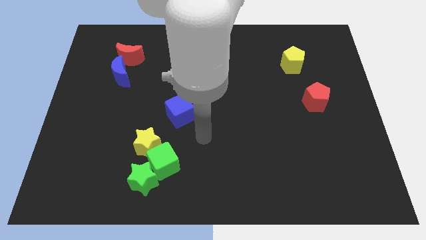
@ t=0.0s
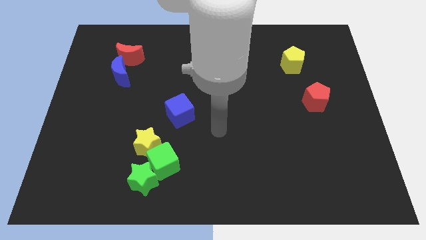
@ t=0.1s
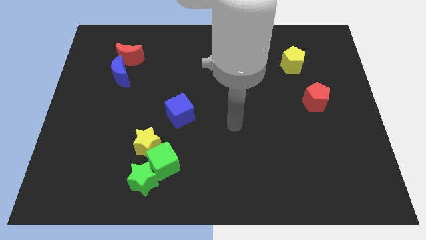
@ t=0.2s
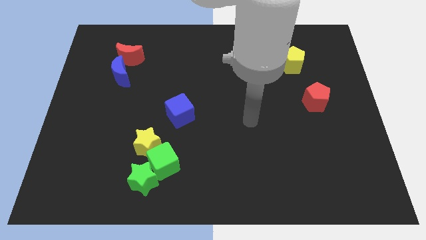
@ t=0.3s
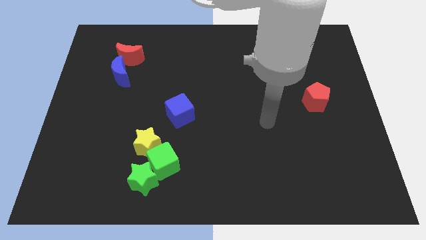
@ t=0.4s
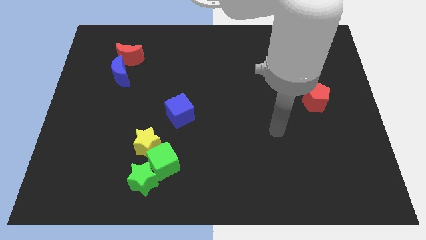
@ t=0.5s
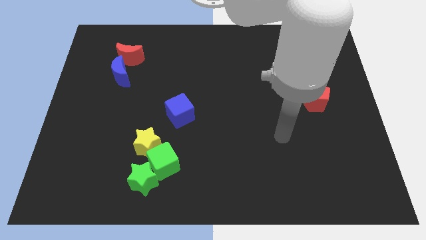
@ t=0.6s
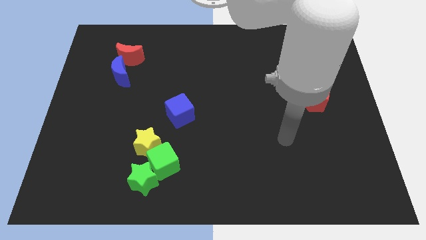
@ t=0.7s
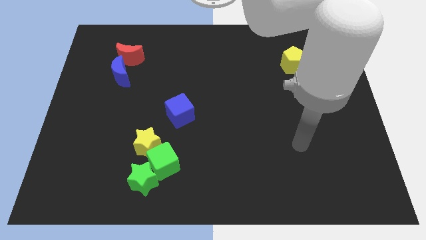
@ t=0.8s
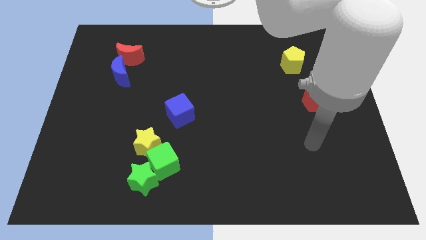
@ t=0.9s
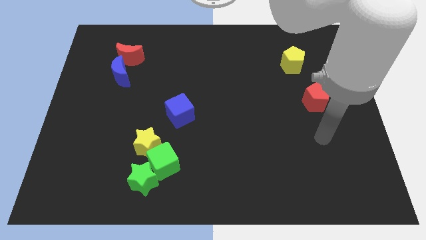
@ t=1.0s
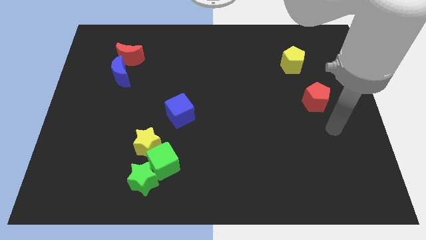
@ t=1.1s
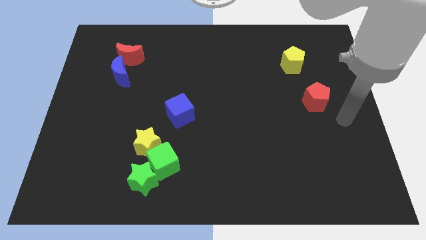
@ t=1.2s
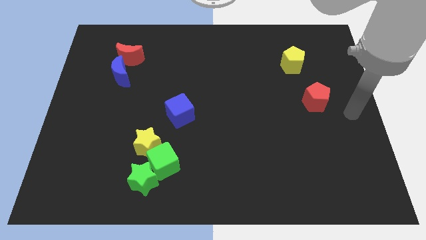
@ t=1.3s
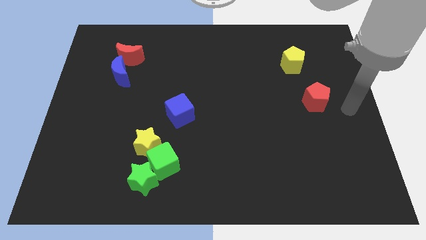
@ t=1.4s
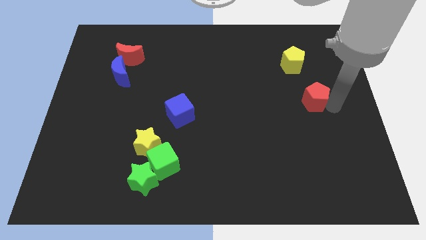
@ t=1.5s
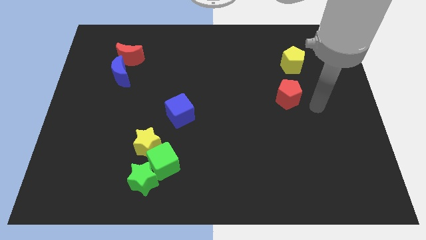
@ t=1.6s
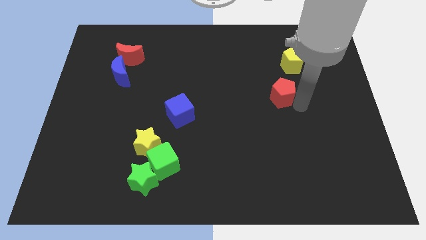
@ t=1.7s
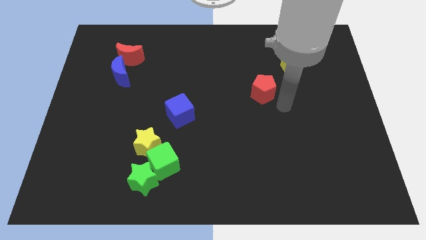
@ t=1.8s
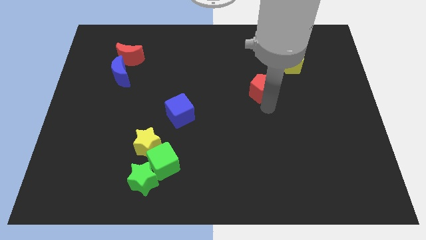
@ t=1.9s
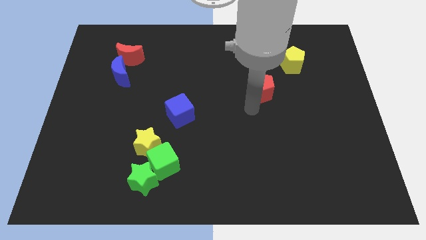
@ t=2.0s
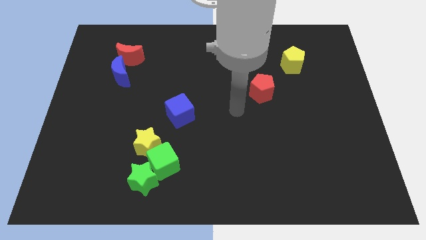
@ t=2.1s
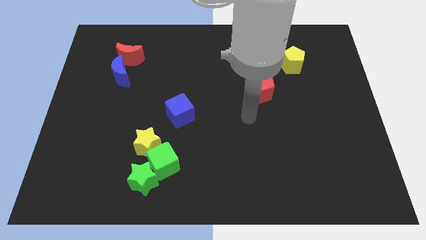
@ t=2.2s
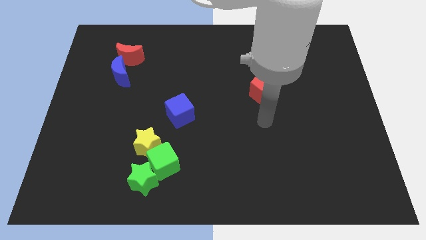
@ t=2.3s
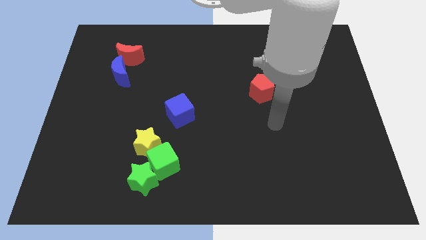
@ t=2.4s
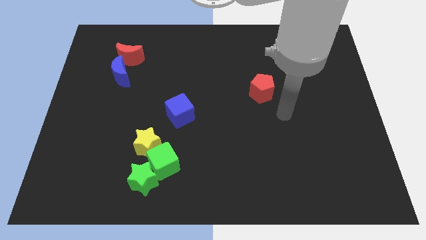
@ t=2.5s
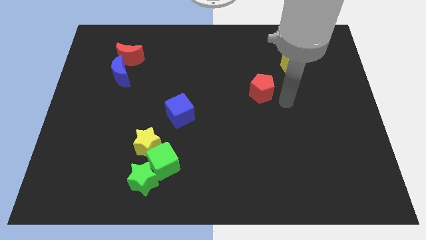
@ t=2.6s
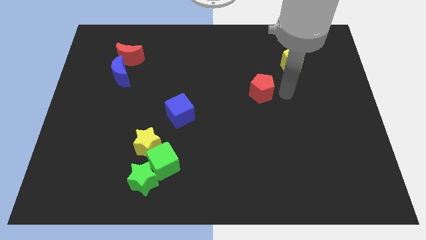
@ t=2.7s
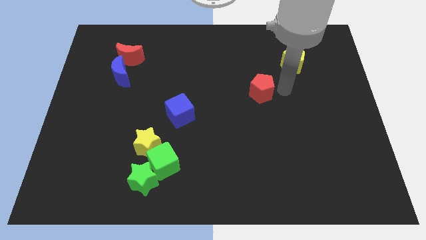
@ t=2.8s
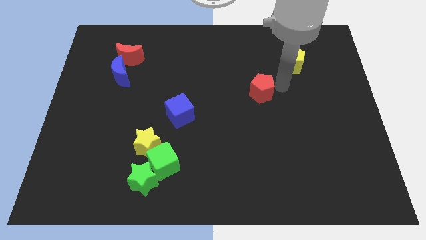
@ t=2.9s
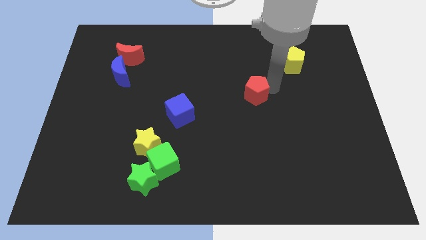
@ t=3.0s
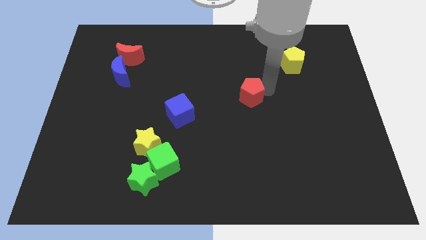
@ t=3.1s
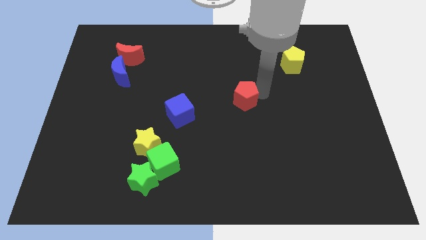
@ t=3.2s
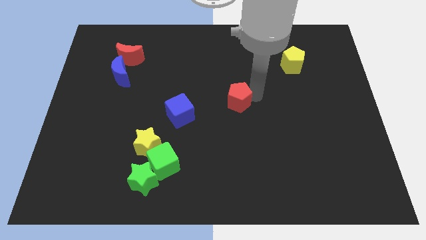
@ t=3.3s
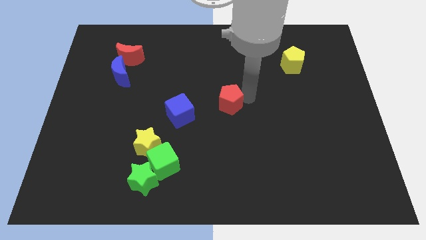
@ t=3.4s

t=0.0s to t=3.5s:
move the red pentagon to the left of the board

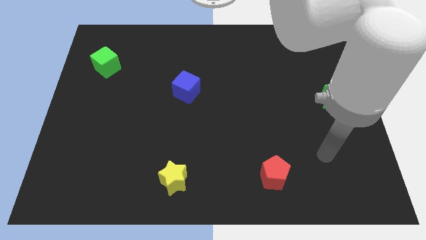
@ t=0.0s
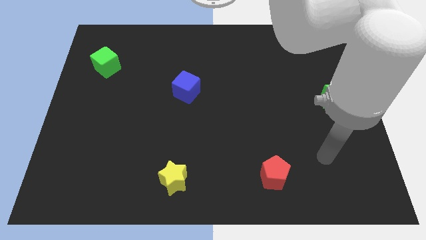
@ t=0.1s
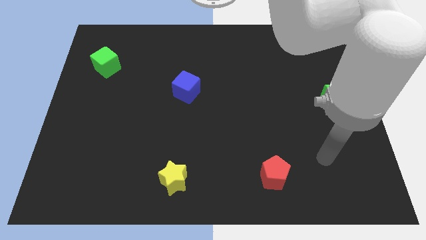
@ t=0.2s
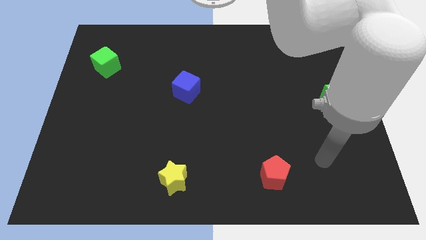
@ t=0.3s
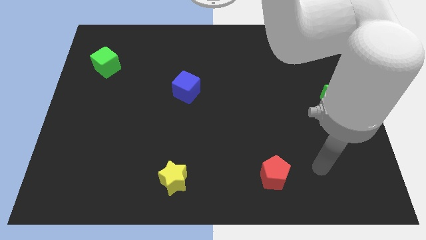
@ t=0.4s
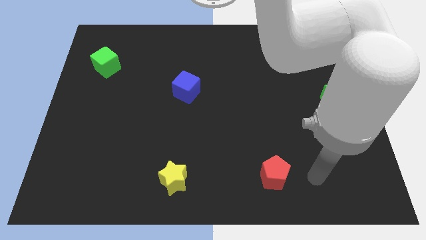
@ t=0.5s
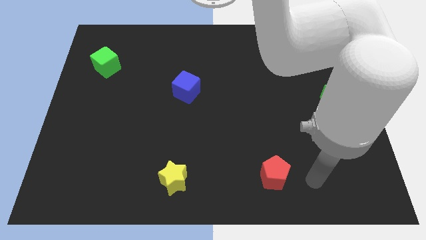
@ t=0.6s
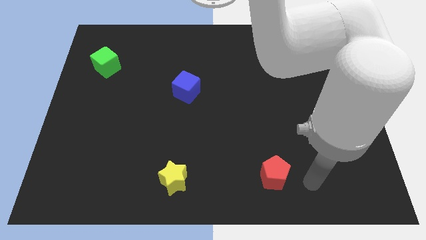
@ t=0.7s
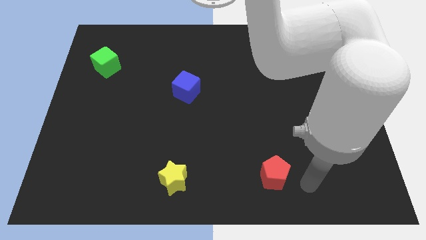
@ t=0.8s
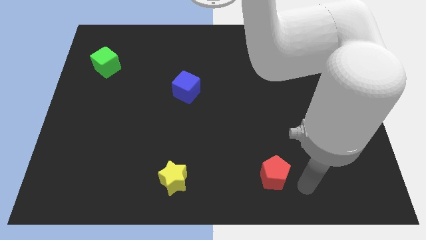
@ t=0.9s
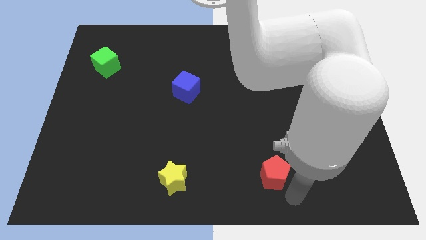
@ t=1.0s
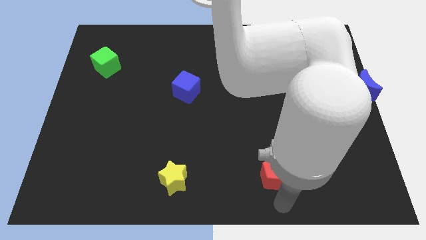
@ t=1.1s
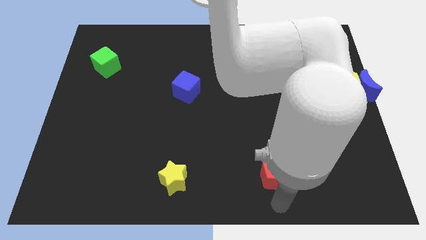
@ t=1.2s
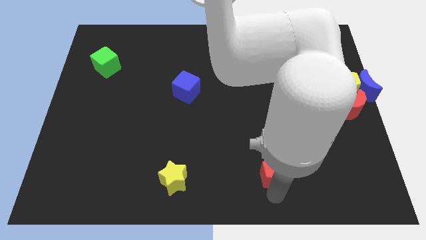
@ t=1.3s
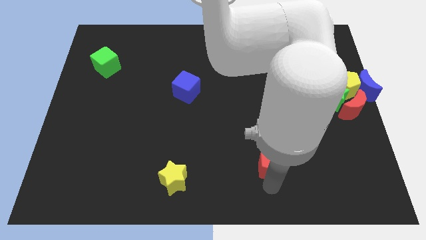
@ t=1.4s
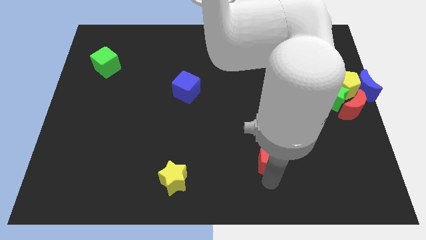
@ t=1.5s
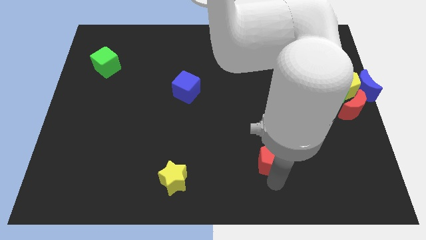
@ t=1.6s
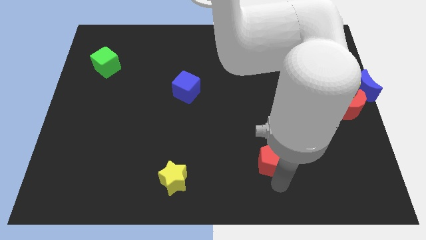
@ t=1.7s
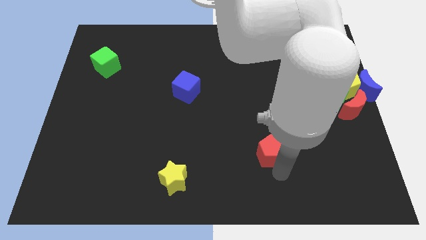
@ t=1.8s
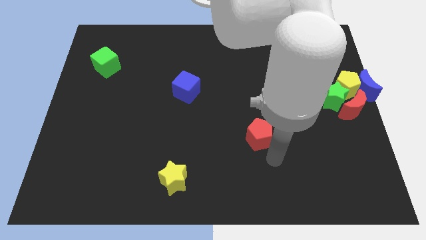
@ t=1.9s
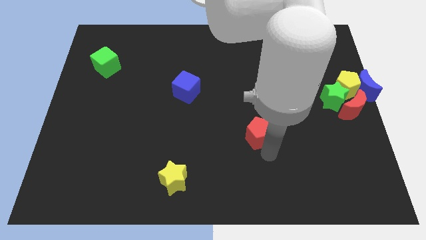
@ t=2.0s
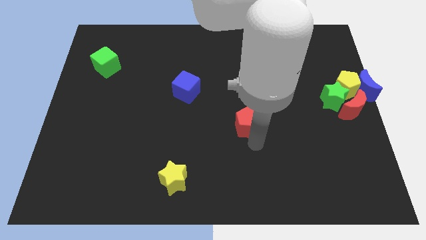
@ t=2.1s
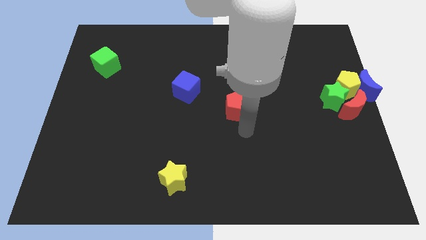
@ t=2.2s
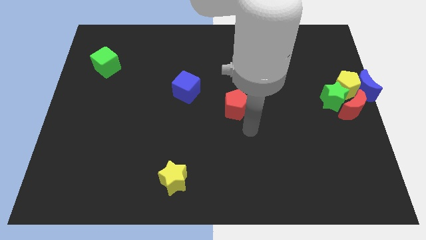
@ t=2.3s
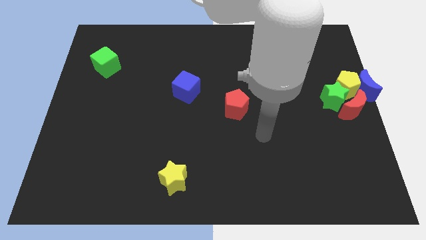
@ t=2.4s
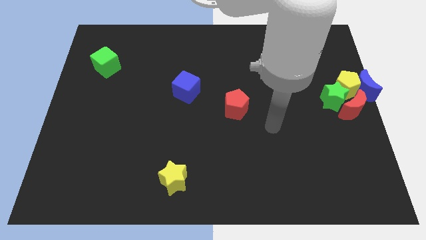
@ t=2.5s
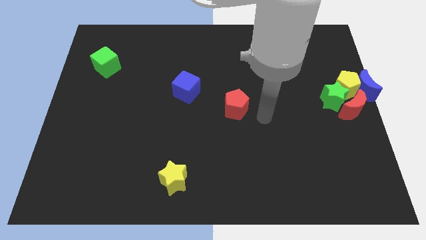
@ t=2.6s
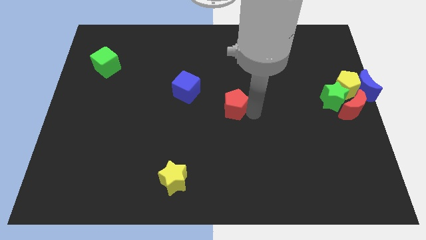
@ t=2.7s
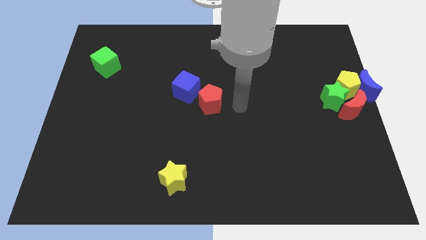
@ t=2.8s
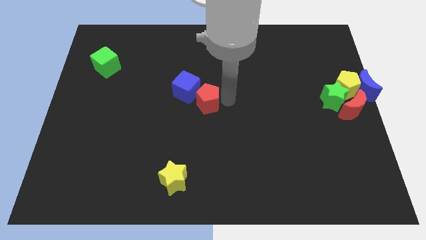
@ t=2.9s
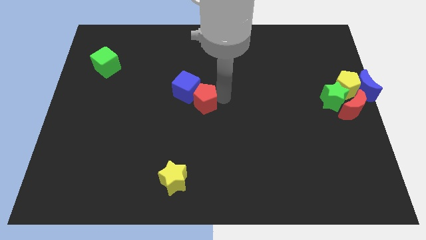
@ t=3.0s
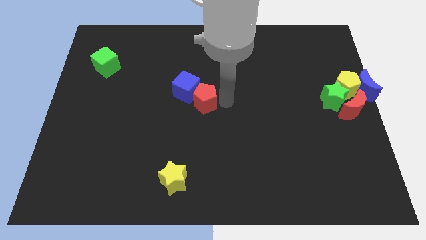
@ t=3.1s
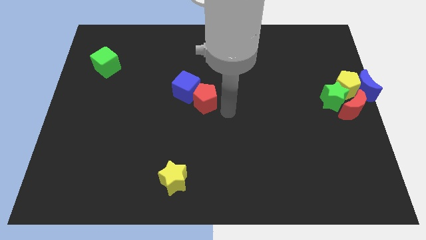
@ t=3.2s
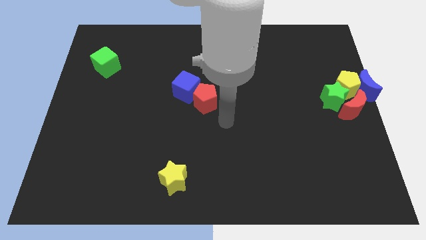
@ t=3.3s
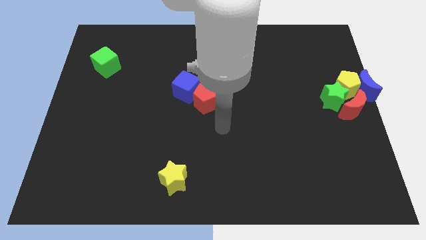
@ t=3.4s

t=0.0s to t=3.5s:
move the red pentagon towards the center of the board

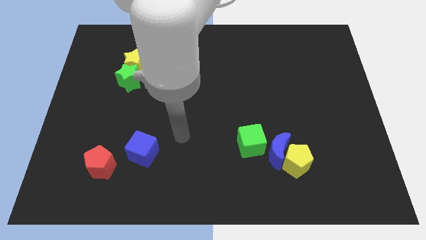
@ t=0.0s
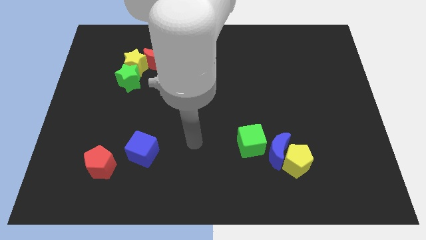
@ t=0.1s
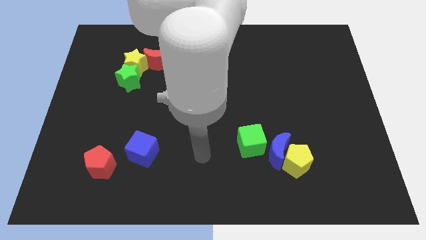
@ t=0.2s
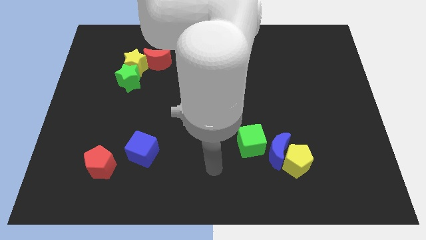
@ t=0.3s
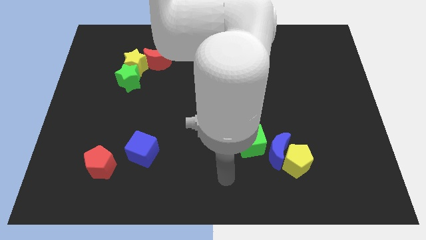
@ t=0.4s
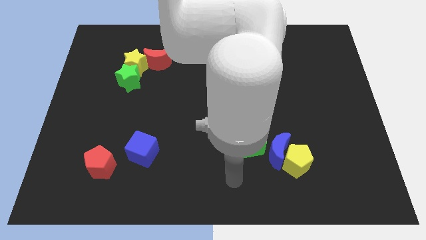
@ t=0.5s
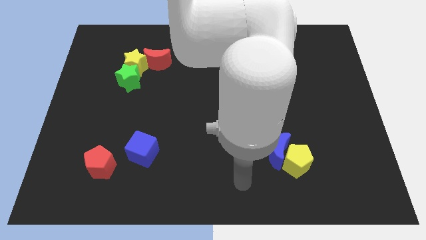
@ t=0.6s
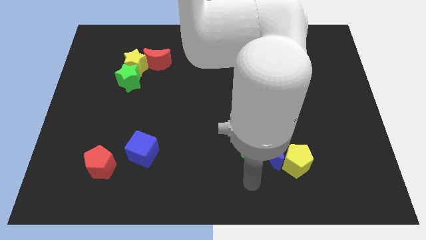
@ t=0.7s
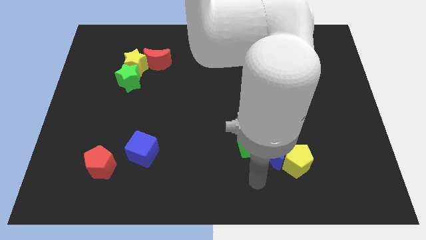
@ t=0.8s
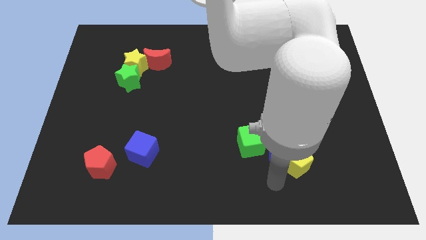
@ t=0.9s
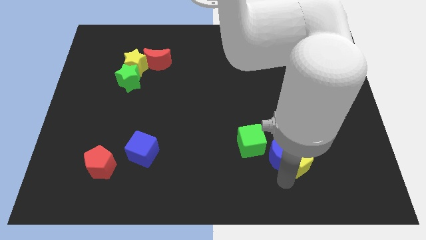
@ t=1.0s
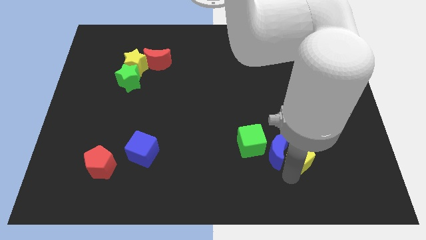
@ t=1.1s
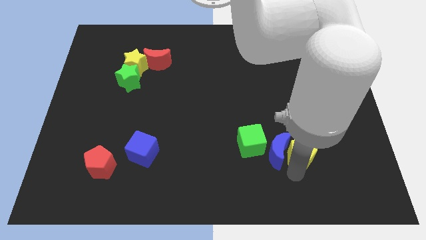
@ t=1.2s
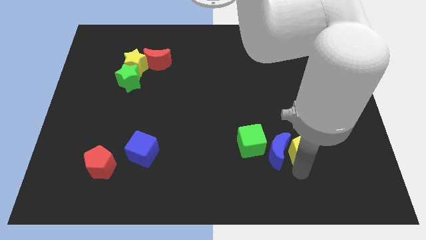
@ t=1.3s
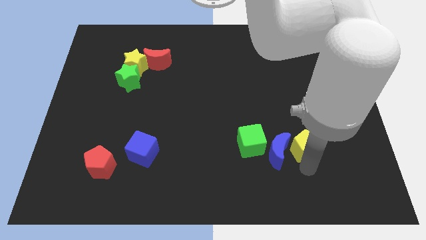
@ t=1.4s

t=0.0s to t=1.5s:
move the arm close to yellow pentagon

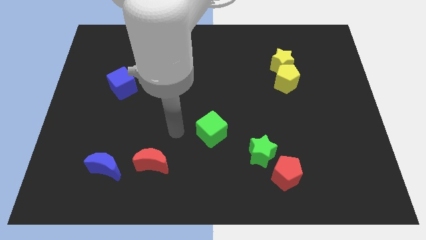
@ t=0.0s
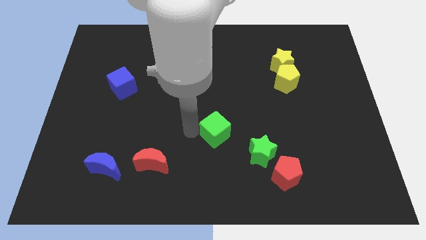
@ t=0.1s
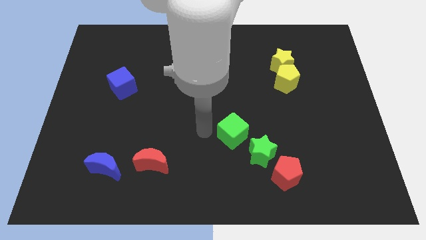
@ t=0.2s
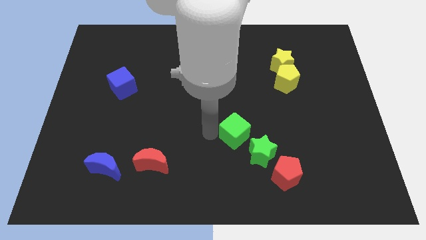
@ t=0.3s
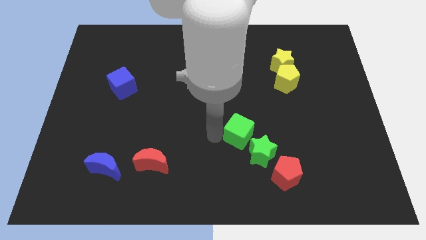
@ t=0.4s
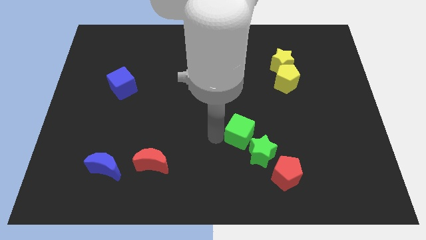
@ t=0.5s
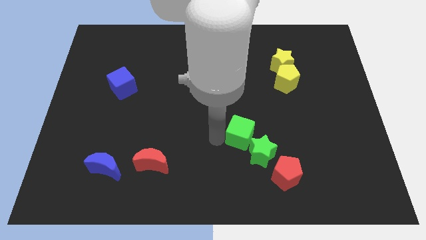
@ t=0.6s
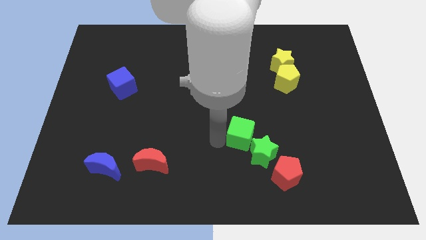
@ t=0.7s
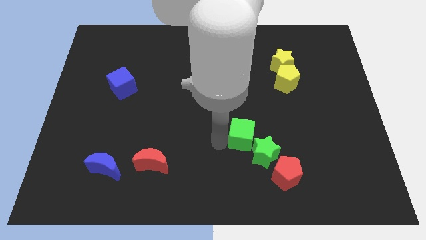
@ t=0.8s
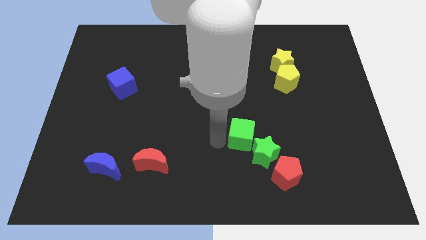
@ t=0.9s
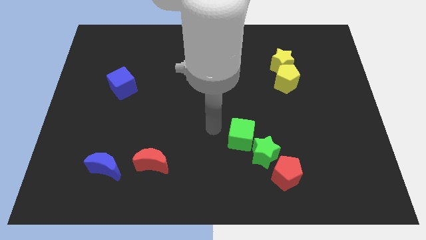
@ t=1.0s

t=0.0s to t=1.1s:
move green cube into green star
